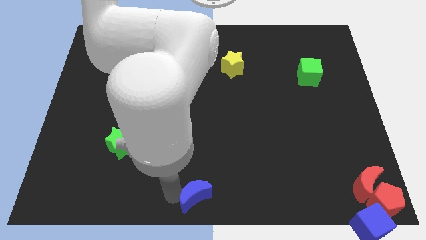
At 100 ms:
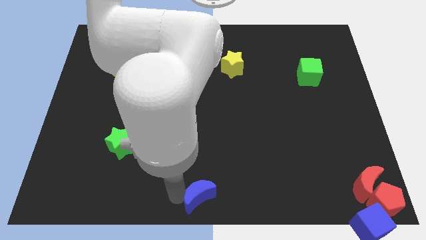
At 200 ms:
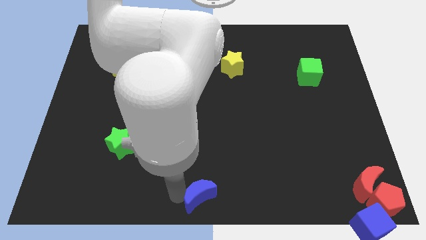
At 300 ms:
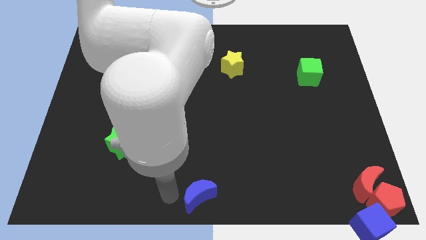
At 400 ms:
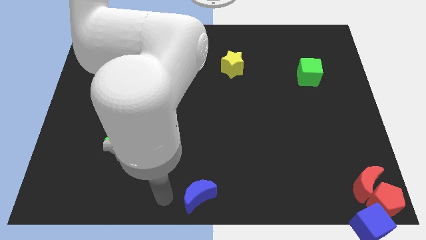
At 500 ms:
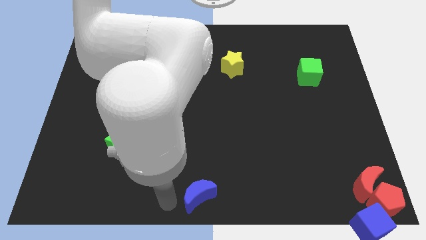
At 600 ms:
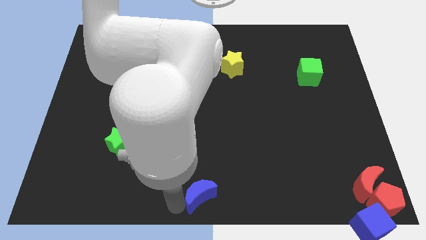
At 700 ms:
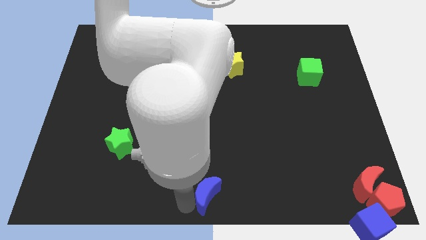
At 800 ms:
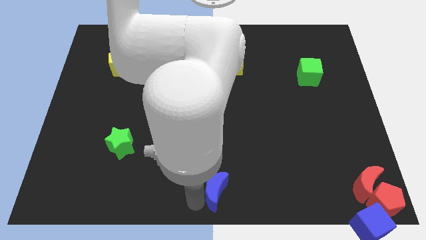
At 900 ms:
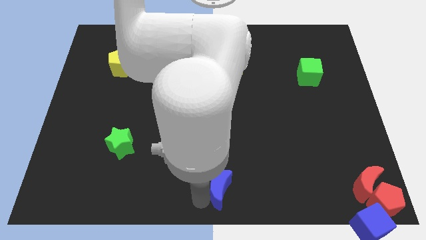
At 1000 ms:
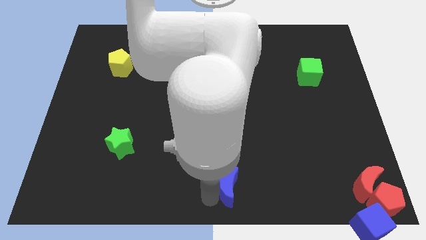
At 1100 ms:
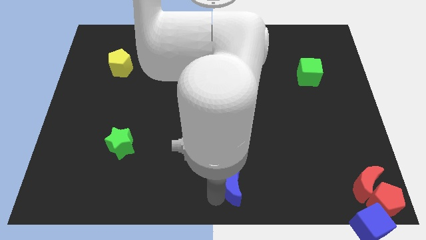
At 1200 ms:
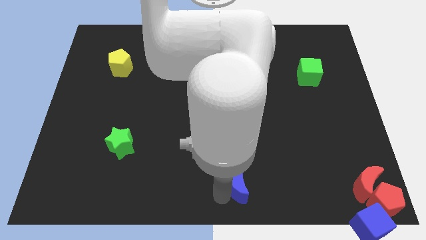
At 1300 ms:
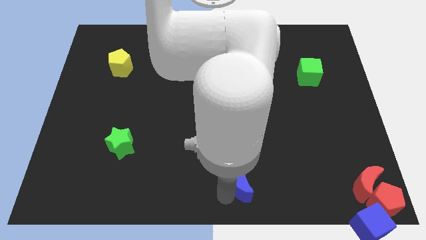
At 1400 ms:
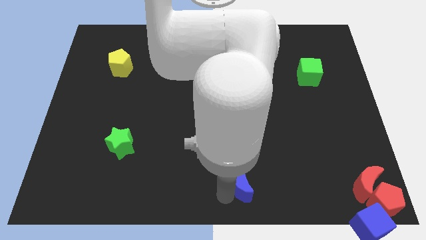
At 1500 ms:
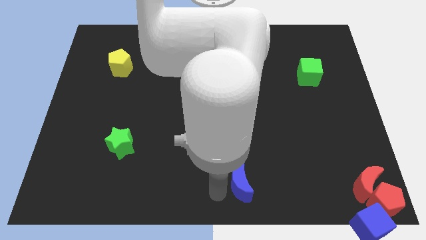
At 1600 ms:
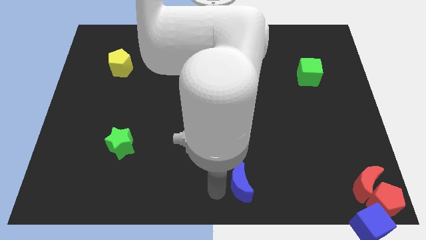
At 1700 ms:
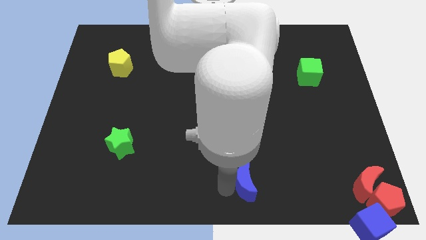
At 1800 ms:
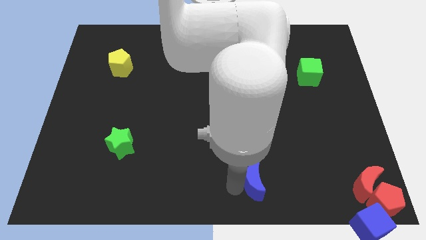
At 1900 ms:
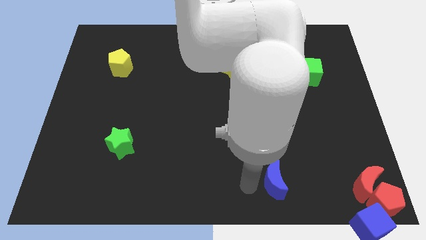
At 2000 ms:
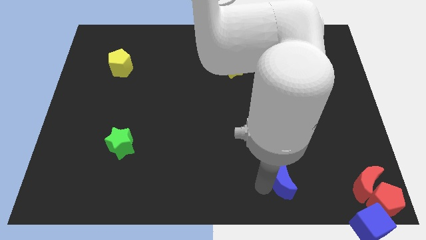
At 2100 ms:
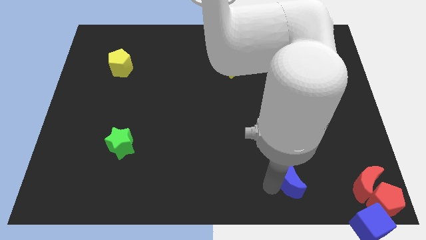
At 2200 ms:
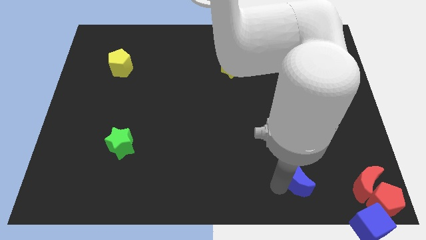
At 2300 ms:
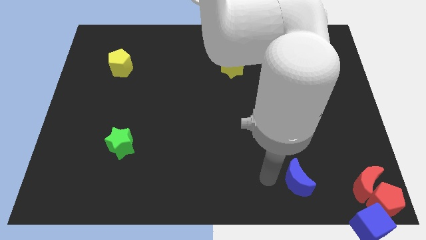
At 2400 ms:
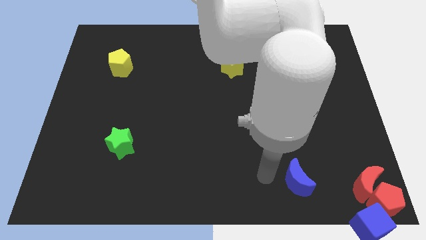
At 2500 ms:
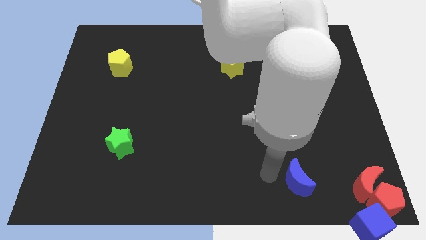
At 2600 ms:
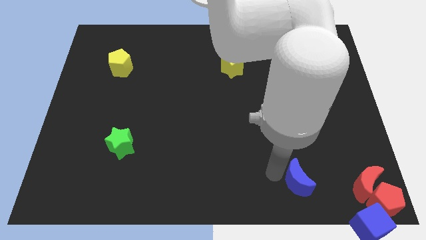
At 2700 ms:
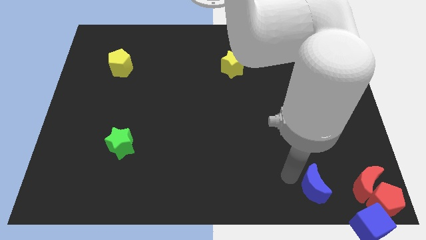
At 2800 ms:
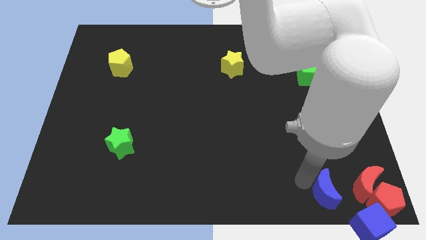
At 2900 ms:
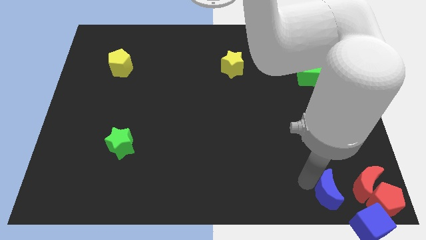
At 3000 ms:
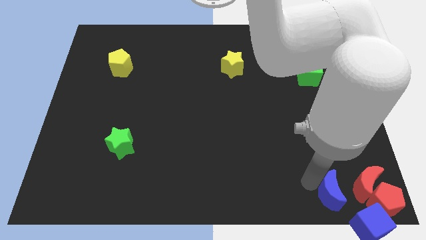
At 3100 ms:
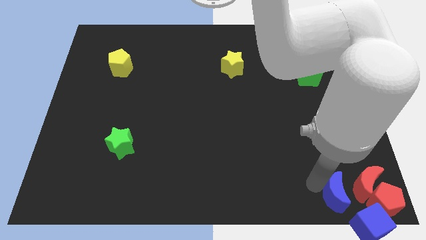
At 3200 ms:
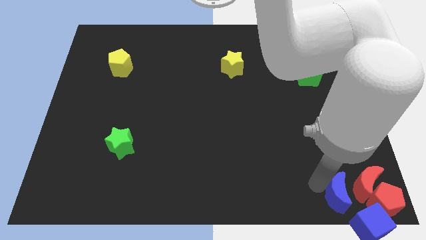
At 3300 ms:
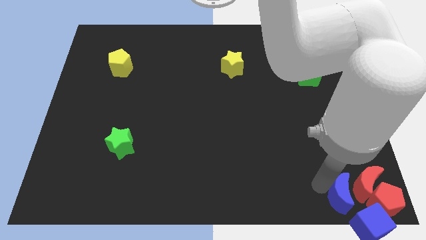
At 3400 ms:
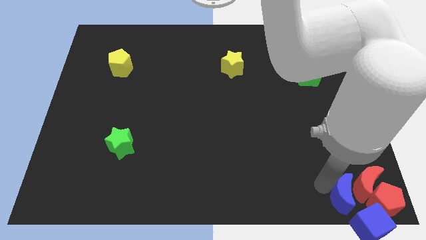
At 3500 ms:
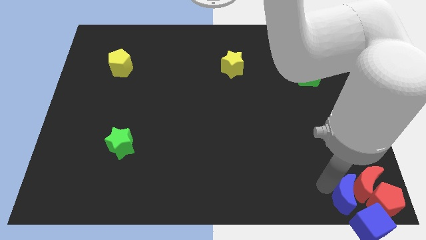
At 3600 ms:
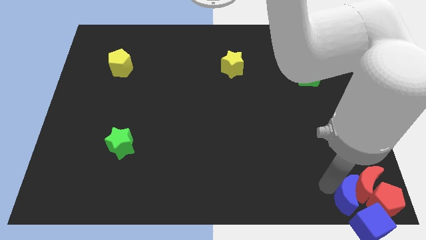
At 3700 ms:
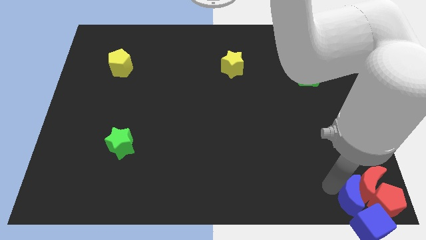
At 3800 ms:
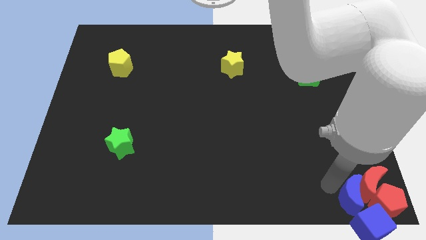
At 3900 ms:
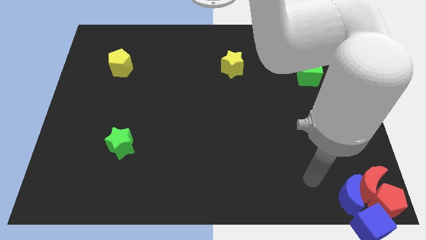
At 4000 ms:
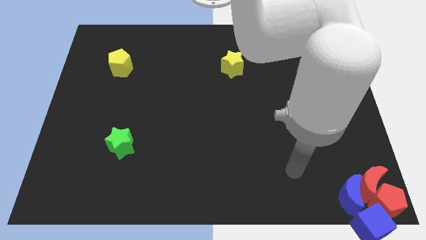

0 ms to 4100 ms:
push blue moon into red moon

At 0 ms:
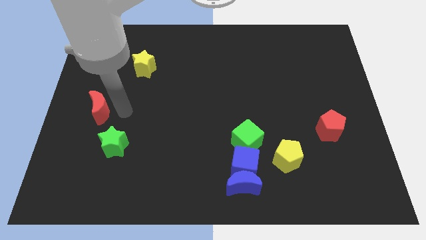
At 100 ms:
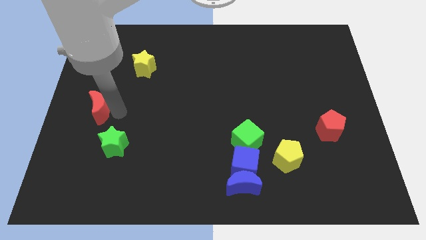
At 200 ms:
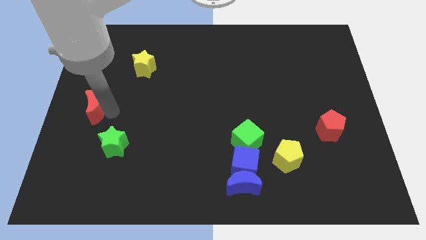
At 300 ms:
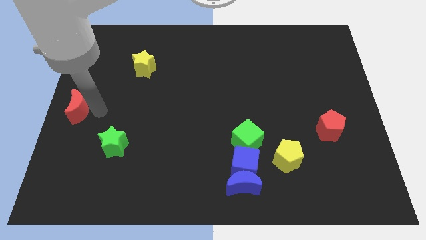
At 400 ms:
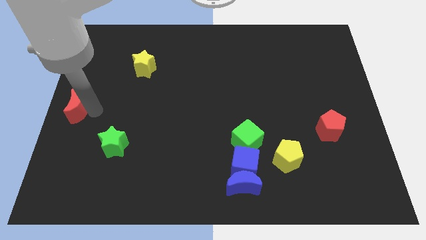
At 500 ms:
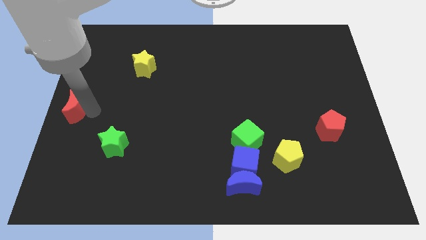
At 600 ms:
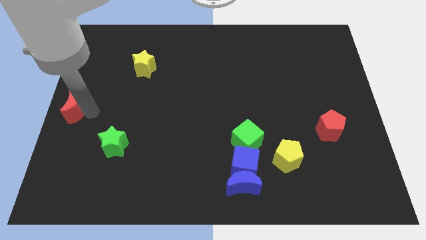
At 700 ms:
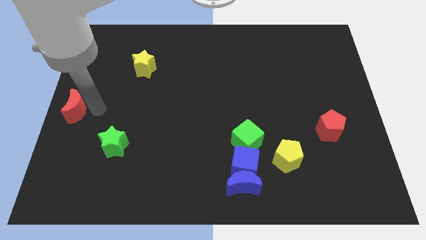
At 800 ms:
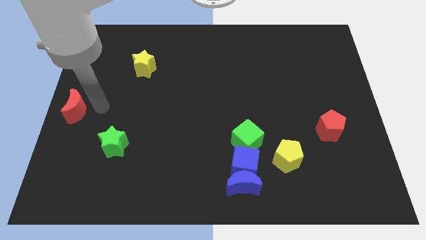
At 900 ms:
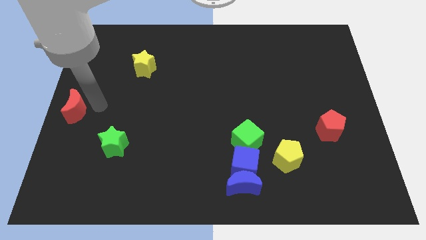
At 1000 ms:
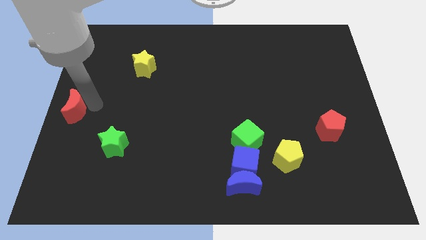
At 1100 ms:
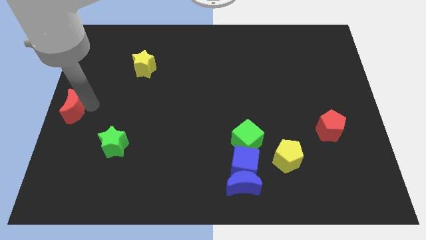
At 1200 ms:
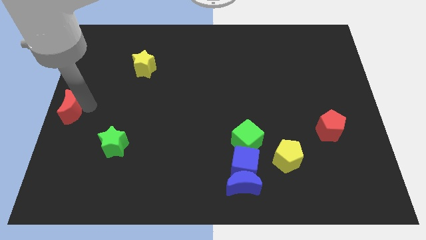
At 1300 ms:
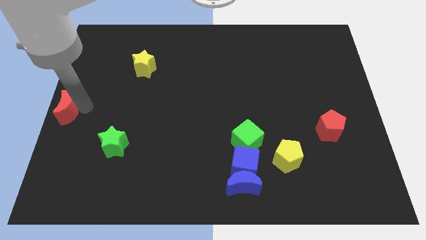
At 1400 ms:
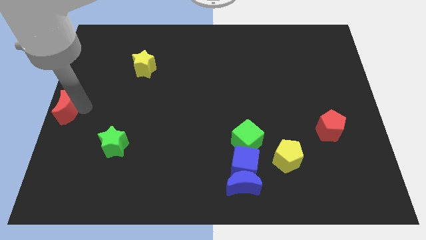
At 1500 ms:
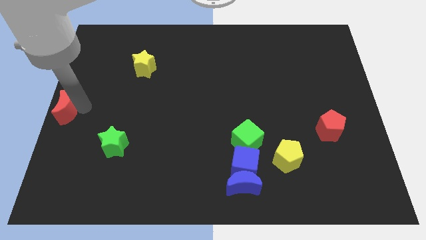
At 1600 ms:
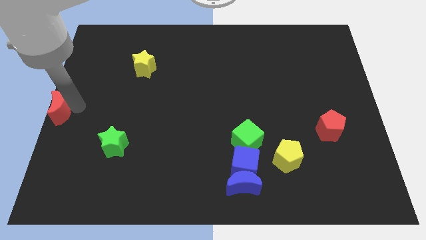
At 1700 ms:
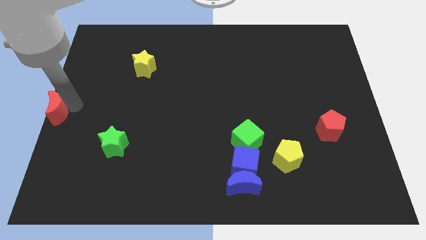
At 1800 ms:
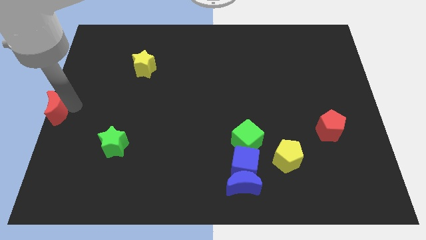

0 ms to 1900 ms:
push the red moon to the center left

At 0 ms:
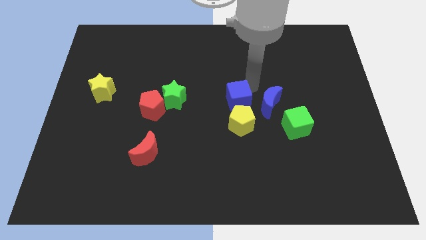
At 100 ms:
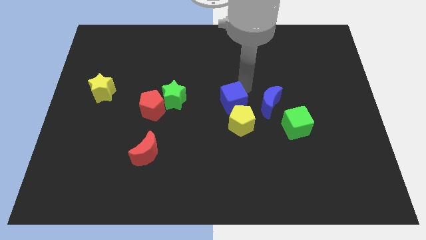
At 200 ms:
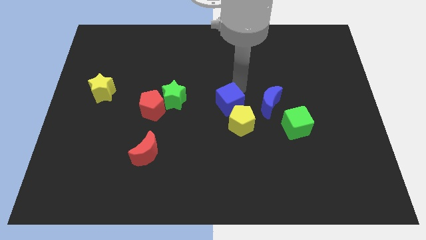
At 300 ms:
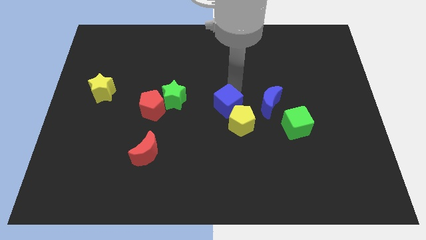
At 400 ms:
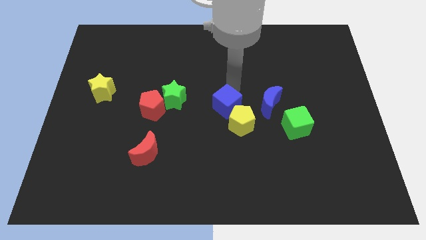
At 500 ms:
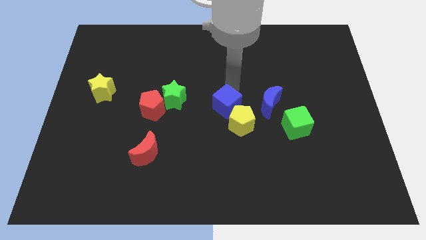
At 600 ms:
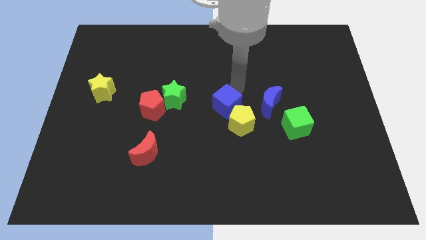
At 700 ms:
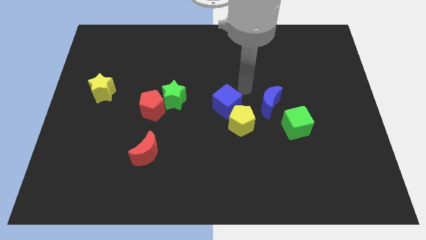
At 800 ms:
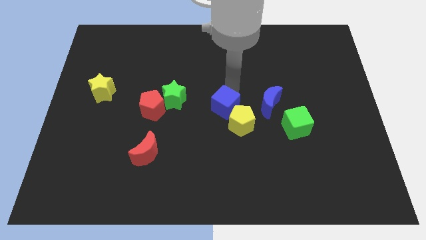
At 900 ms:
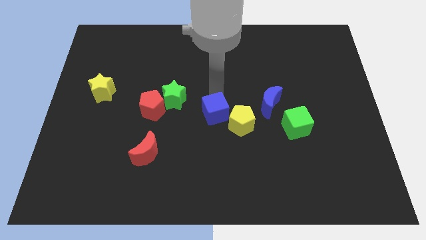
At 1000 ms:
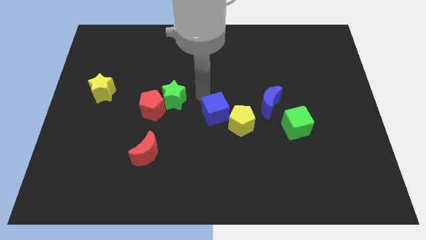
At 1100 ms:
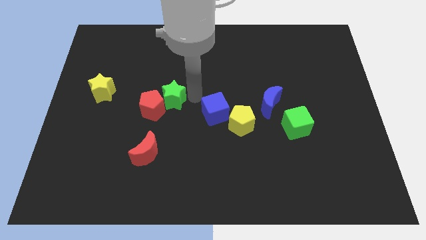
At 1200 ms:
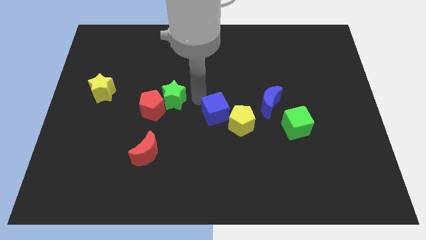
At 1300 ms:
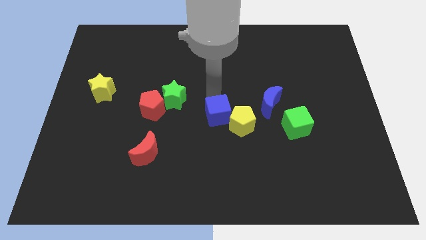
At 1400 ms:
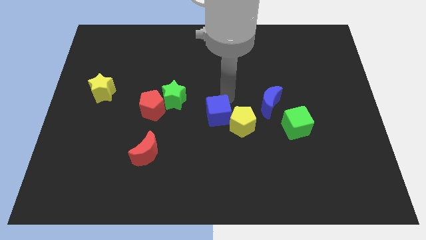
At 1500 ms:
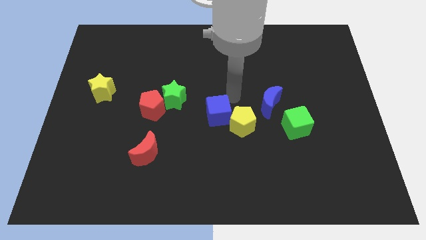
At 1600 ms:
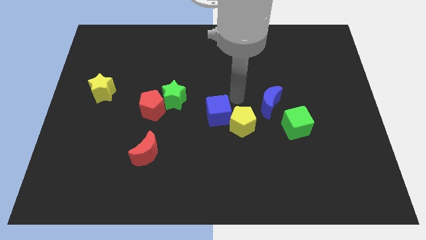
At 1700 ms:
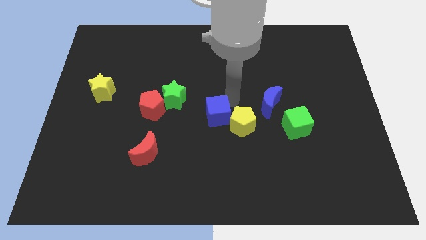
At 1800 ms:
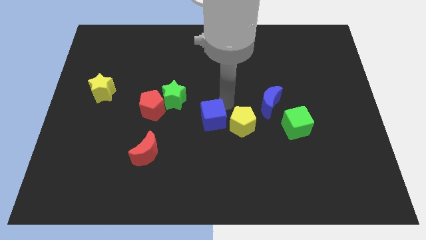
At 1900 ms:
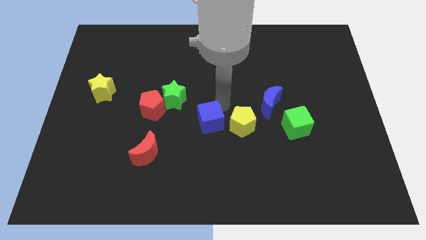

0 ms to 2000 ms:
move the blue cube to the left of the yellow pentagon

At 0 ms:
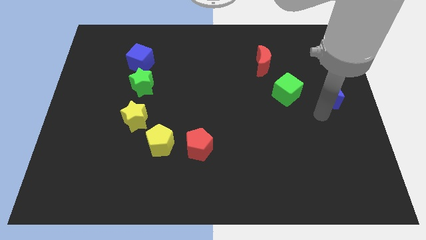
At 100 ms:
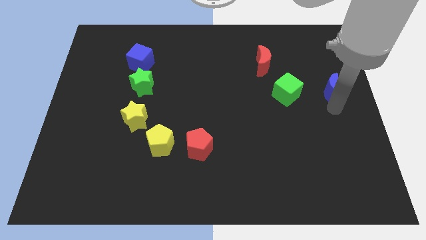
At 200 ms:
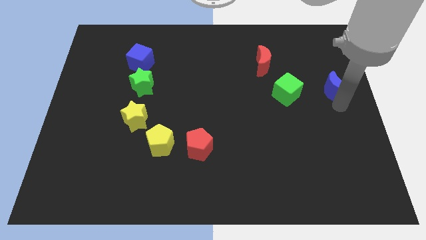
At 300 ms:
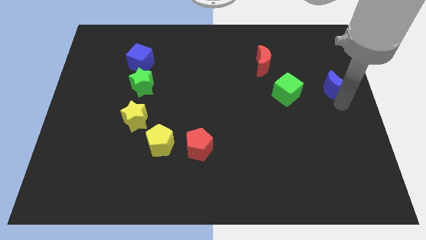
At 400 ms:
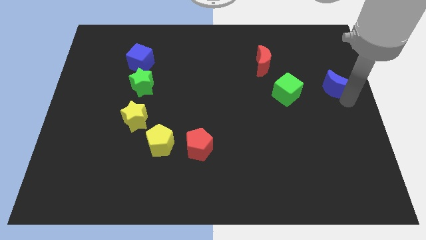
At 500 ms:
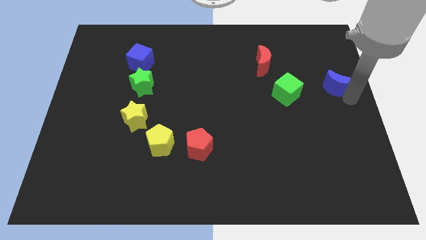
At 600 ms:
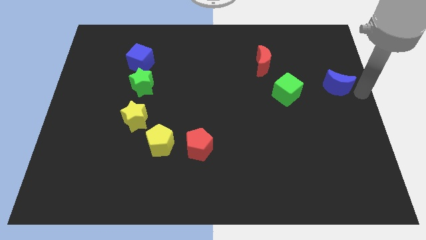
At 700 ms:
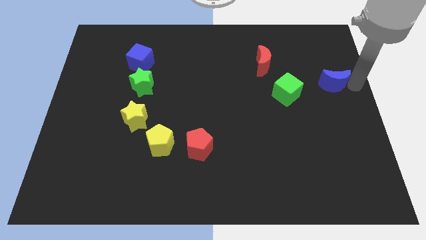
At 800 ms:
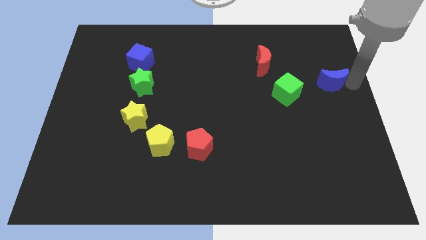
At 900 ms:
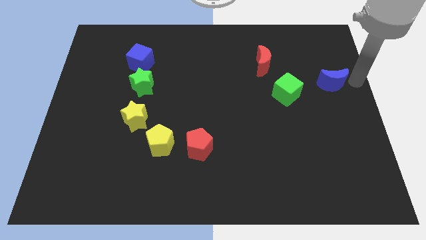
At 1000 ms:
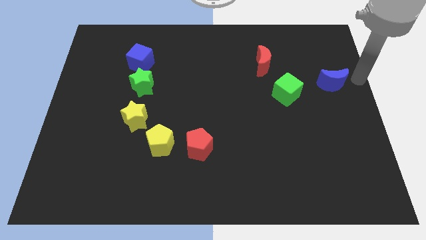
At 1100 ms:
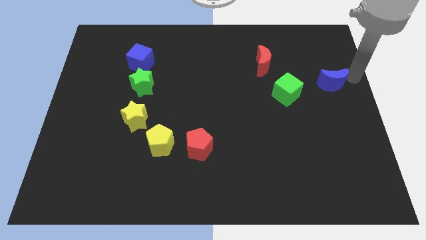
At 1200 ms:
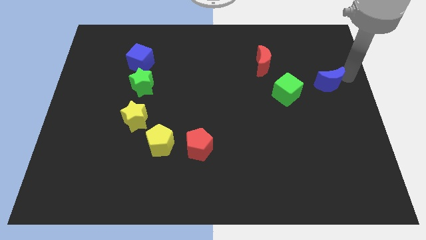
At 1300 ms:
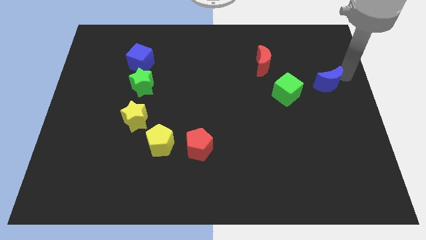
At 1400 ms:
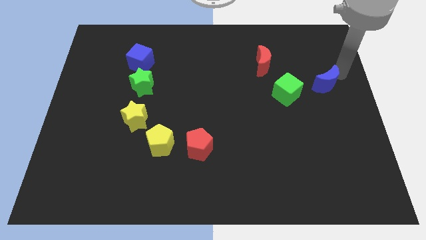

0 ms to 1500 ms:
push blue moon diagonally top right to the green cube
